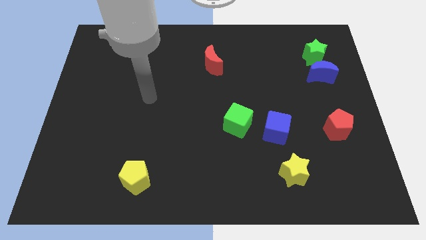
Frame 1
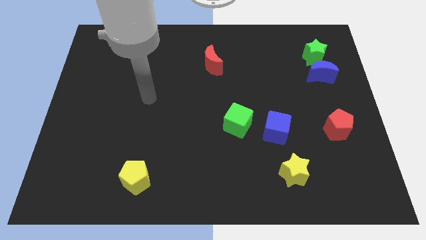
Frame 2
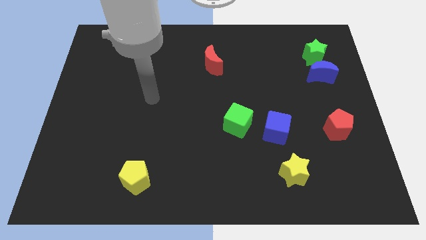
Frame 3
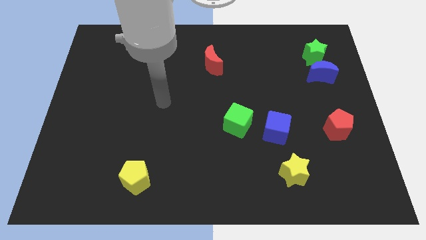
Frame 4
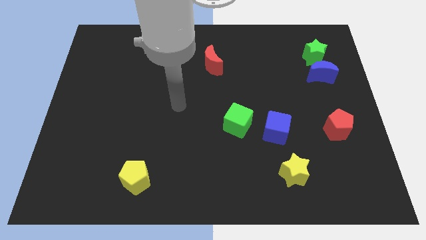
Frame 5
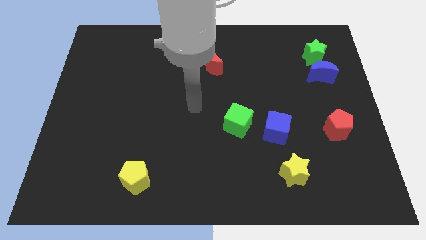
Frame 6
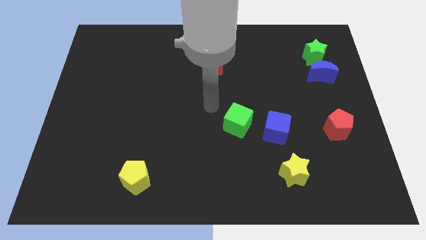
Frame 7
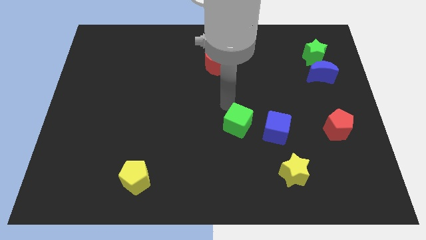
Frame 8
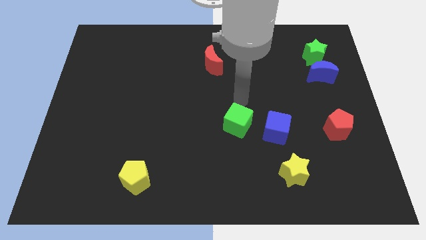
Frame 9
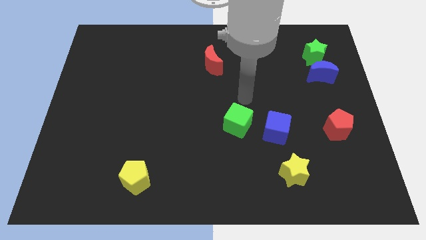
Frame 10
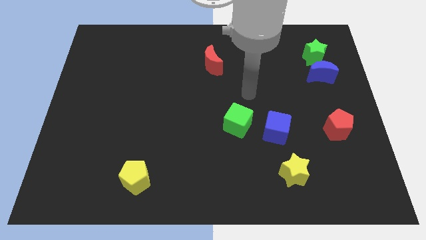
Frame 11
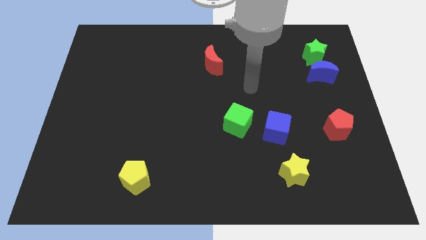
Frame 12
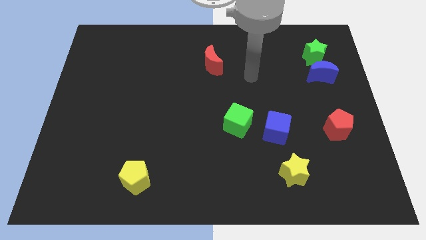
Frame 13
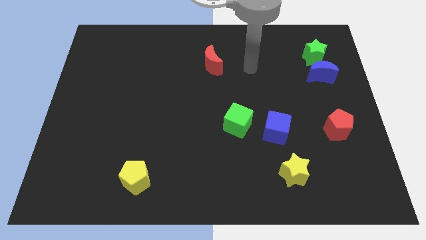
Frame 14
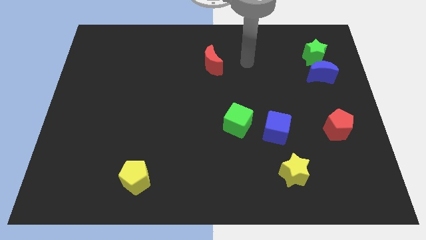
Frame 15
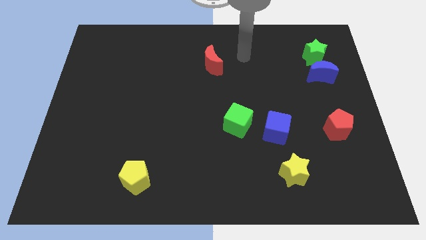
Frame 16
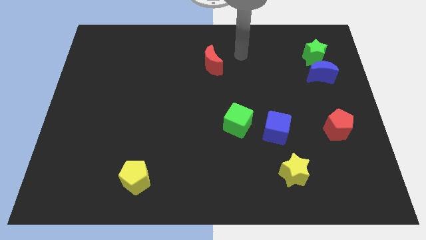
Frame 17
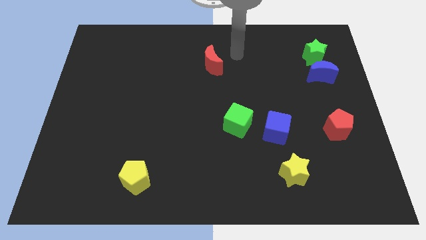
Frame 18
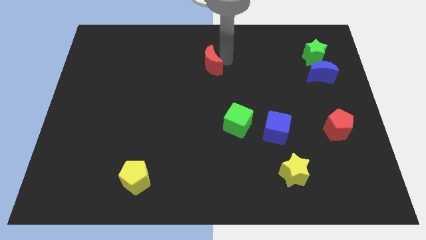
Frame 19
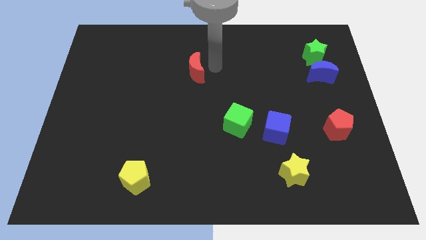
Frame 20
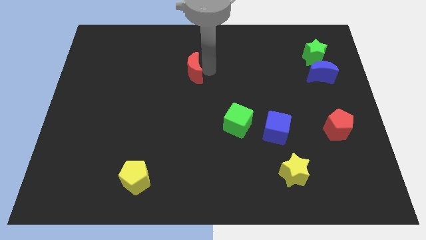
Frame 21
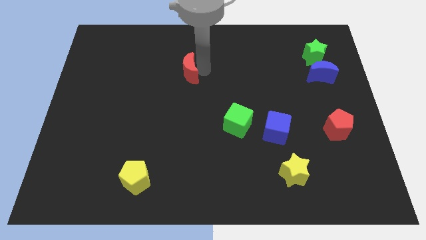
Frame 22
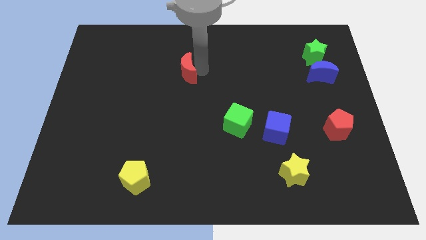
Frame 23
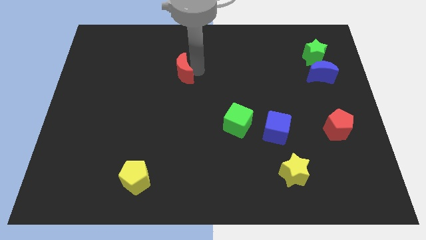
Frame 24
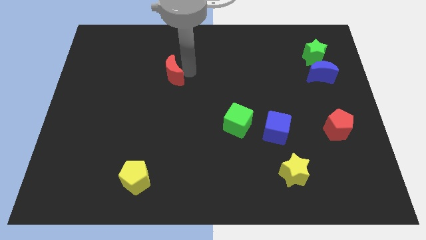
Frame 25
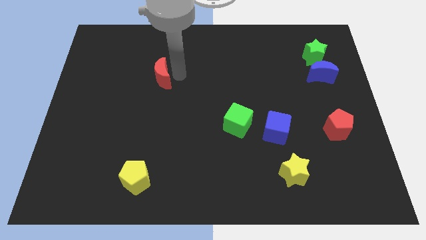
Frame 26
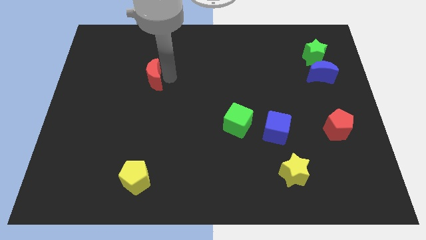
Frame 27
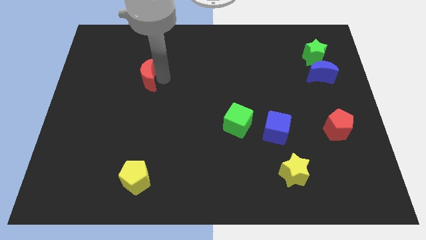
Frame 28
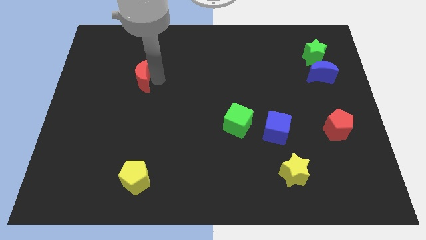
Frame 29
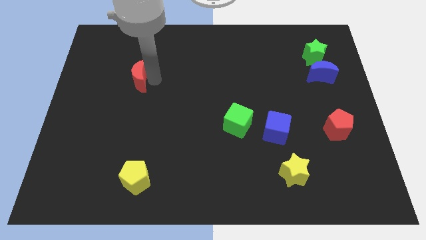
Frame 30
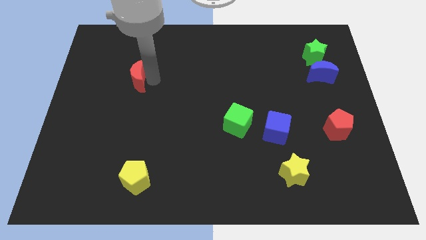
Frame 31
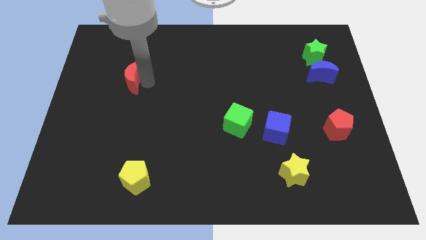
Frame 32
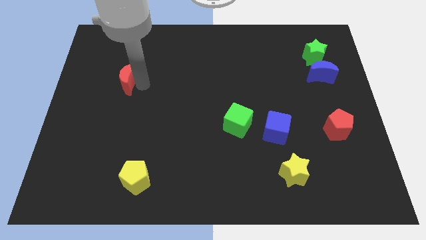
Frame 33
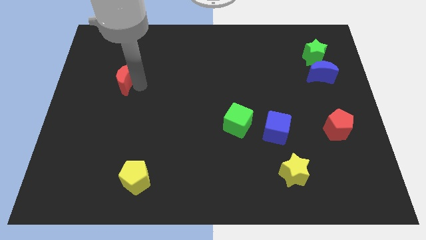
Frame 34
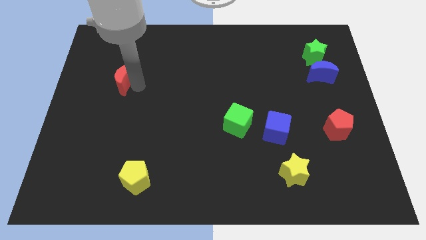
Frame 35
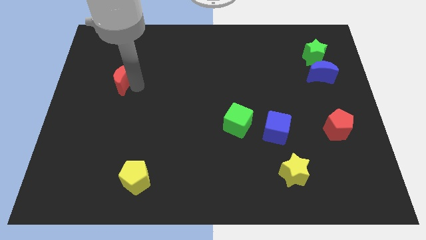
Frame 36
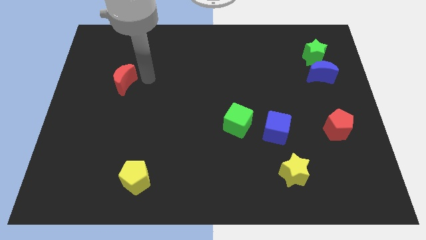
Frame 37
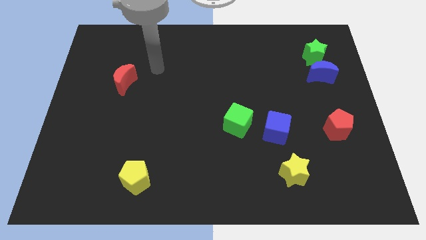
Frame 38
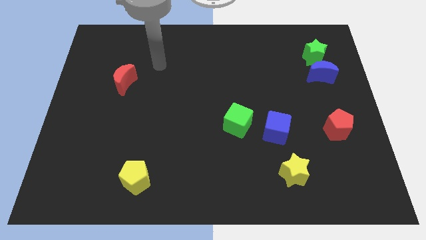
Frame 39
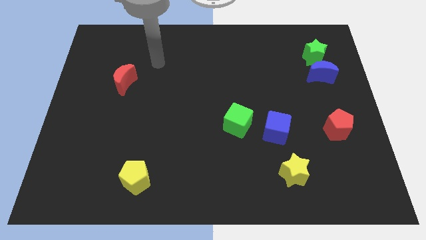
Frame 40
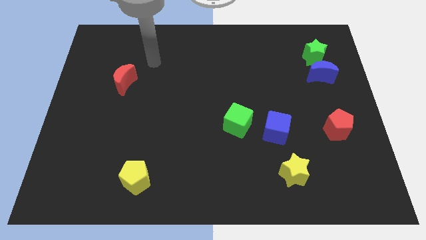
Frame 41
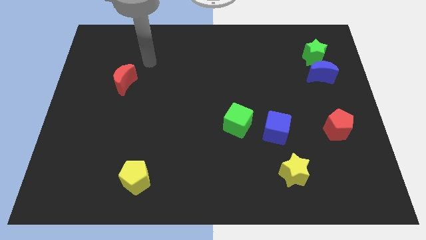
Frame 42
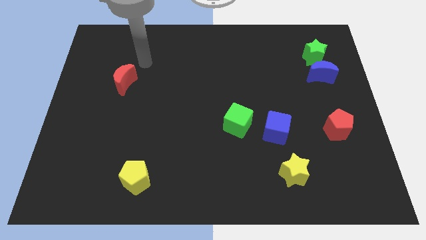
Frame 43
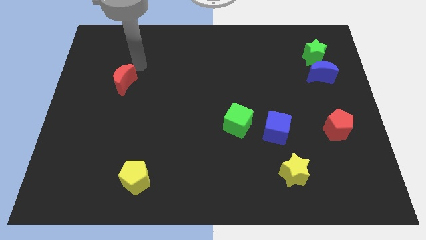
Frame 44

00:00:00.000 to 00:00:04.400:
place red crescent above the yellow pentagon in a line

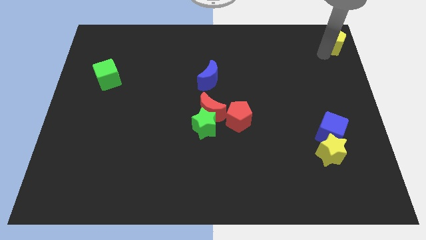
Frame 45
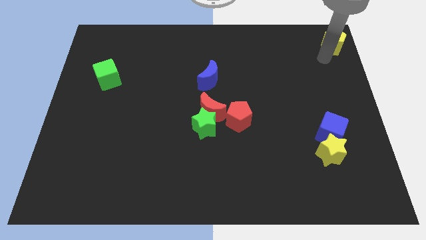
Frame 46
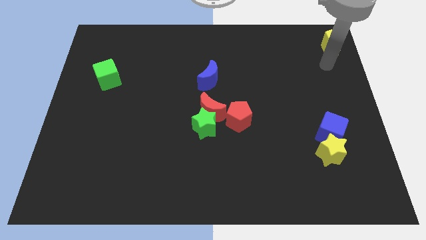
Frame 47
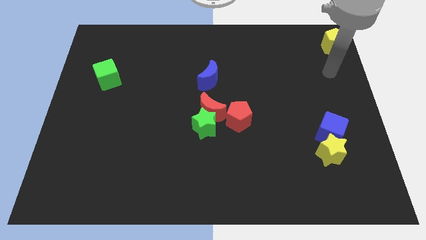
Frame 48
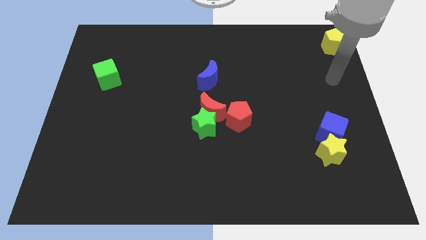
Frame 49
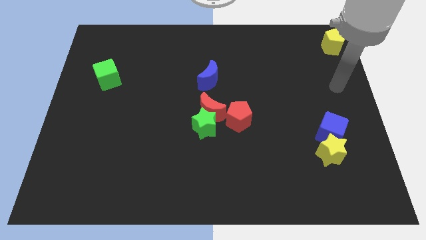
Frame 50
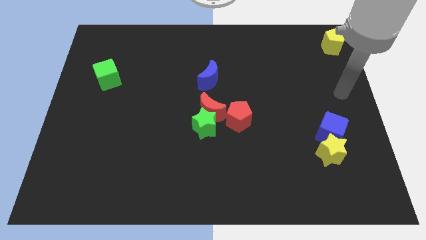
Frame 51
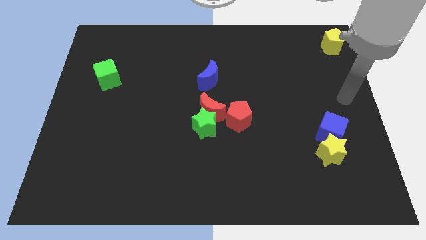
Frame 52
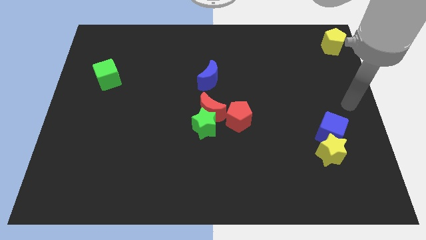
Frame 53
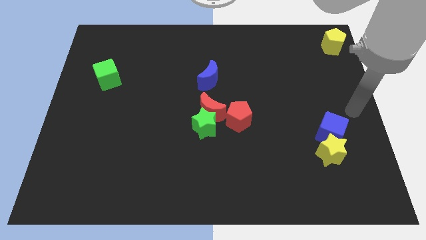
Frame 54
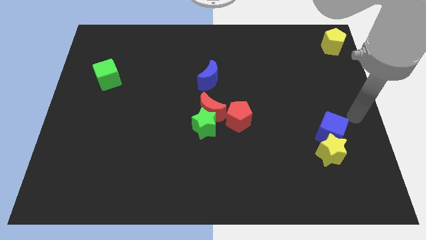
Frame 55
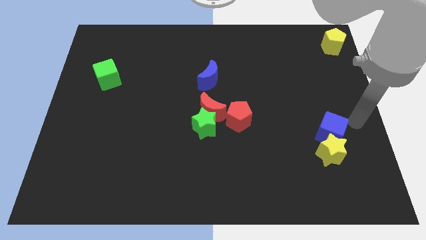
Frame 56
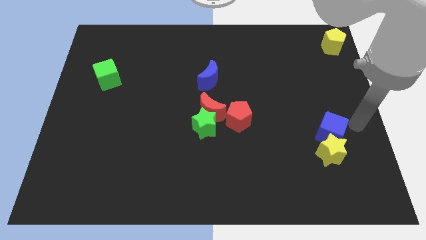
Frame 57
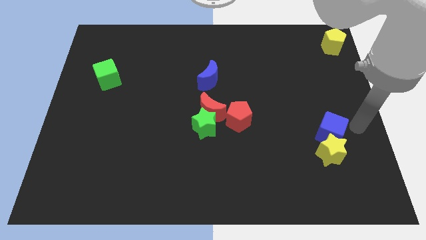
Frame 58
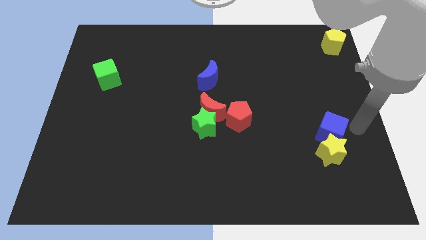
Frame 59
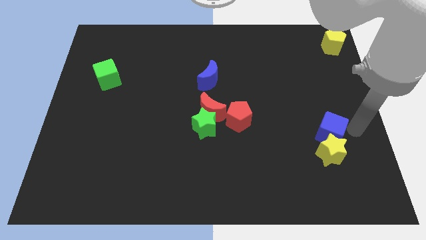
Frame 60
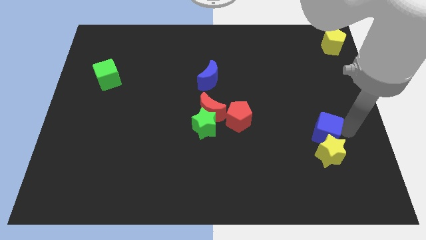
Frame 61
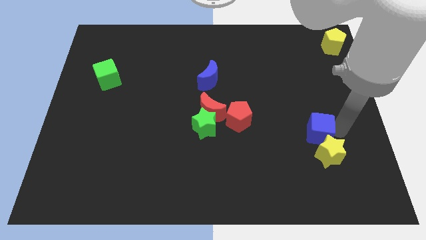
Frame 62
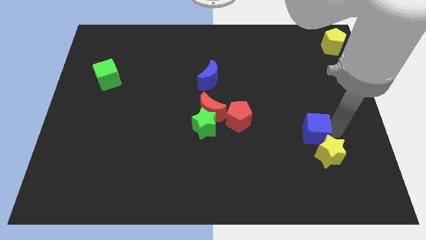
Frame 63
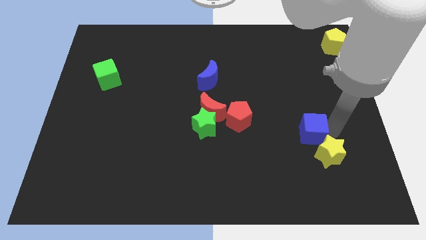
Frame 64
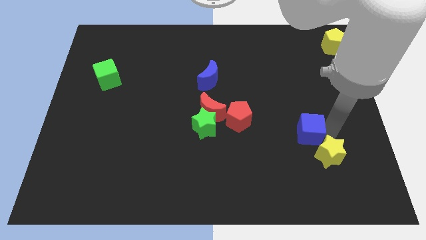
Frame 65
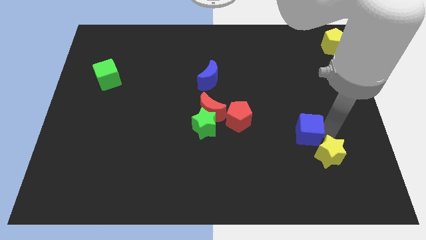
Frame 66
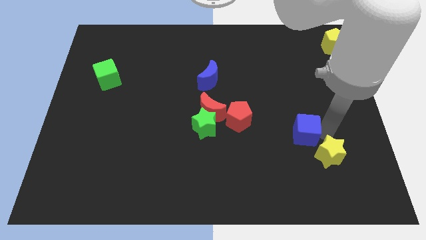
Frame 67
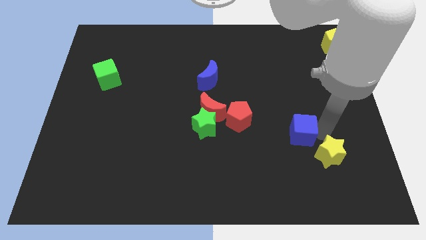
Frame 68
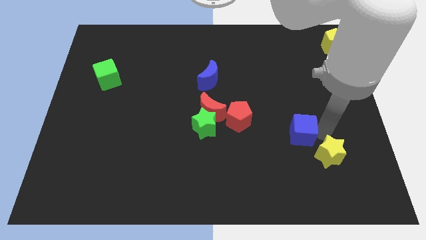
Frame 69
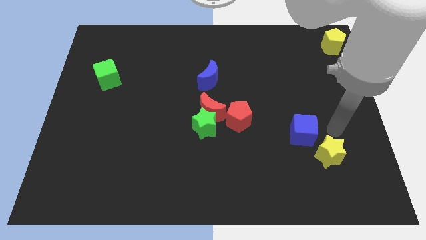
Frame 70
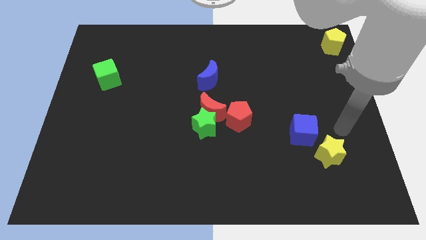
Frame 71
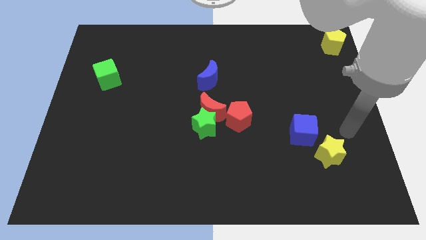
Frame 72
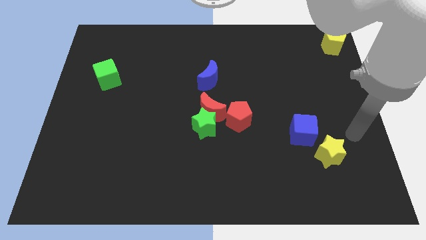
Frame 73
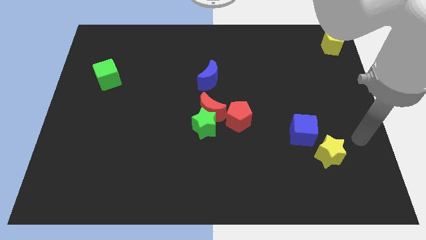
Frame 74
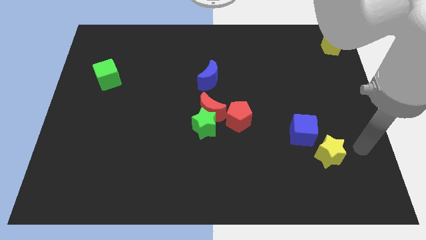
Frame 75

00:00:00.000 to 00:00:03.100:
move your arm to the right of the yellow star

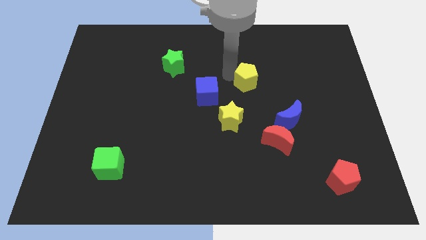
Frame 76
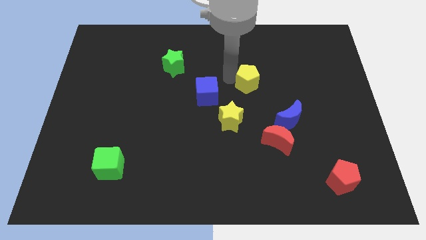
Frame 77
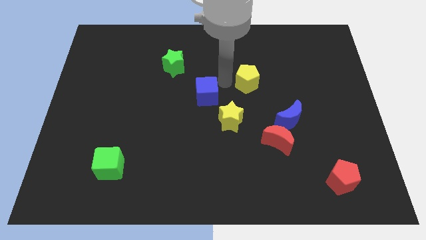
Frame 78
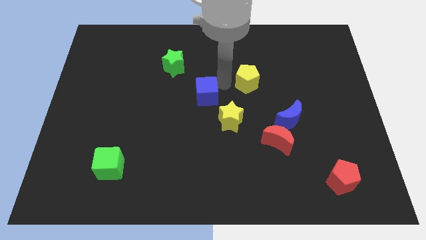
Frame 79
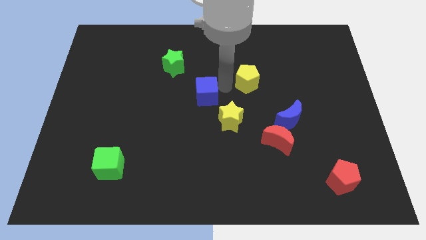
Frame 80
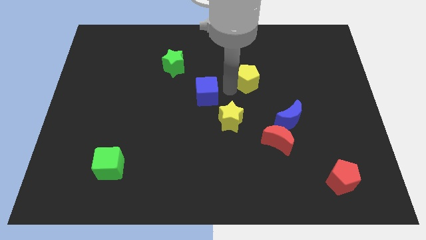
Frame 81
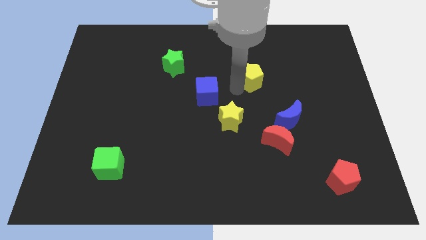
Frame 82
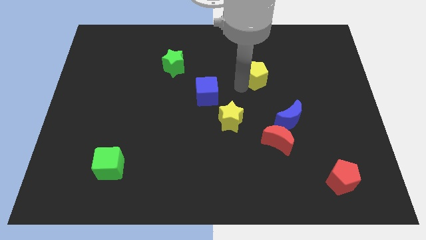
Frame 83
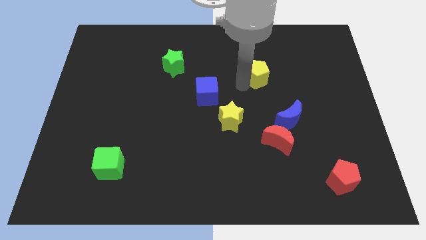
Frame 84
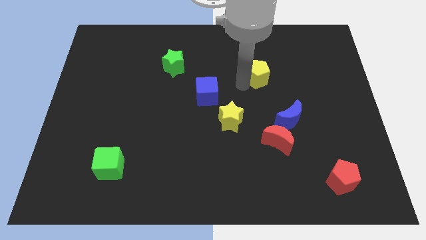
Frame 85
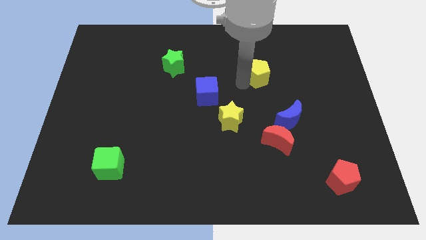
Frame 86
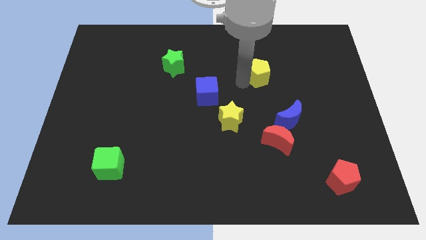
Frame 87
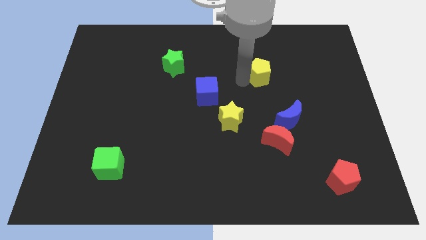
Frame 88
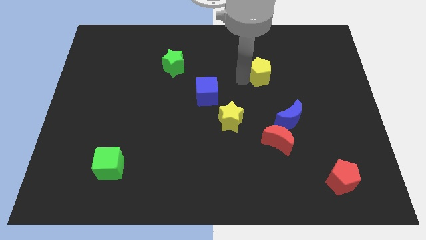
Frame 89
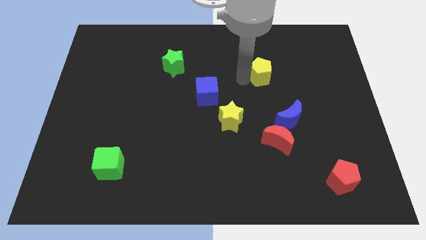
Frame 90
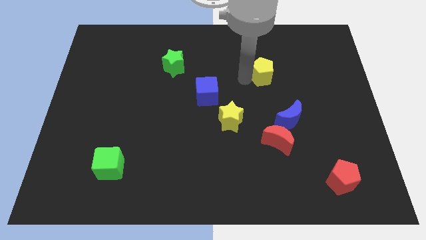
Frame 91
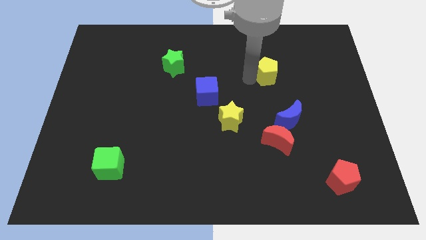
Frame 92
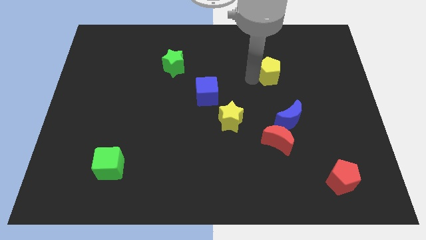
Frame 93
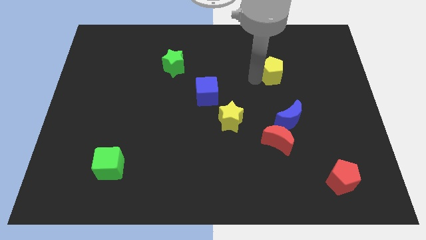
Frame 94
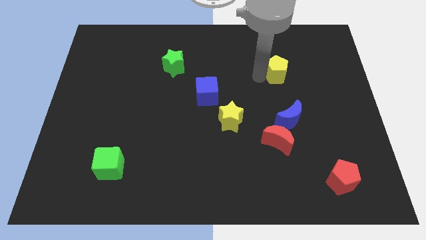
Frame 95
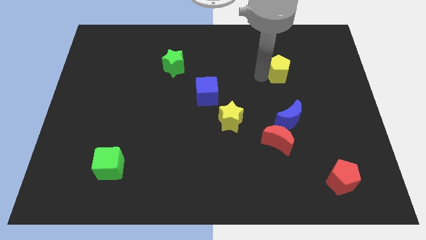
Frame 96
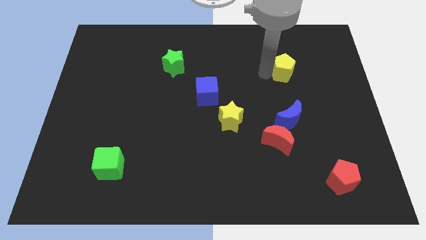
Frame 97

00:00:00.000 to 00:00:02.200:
put the yellow pentagon diagonally to the top right of the yellow star
